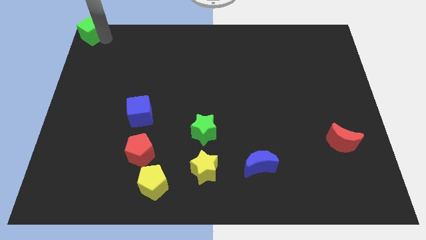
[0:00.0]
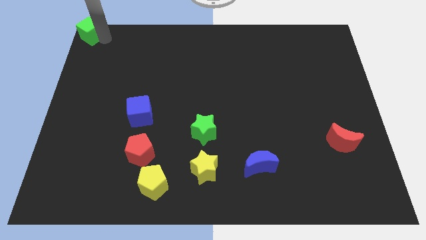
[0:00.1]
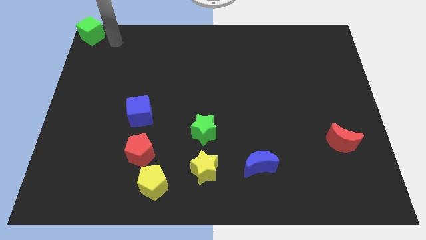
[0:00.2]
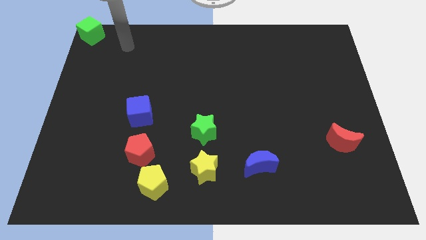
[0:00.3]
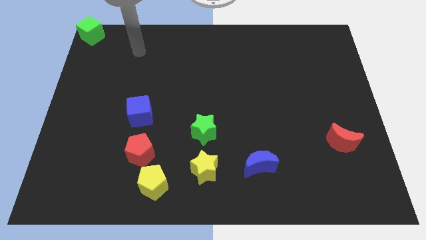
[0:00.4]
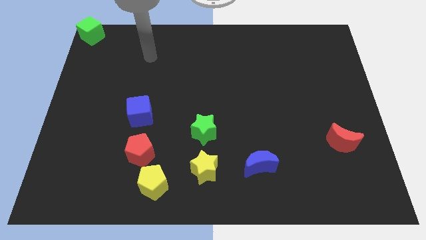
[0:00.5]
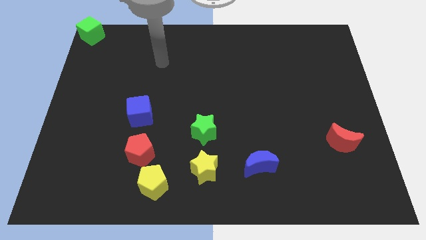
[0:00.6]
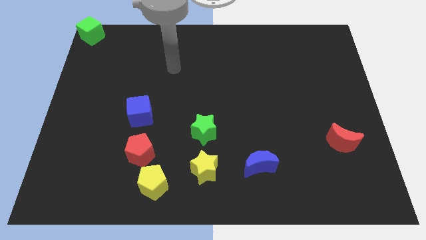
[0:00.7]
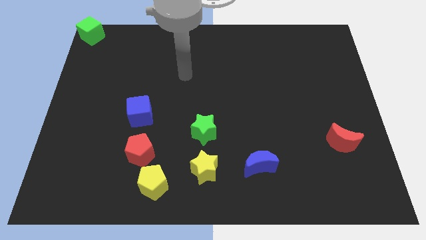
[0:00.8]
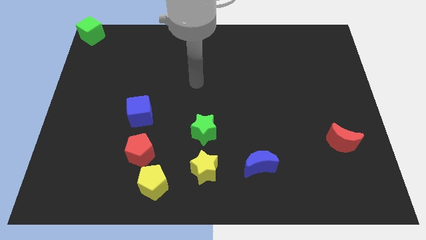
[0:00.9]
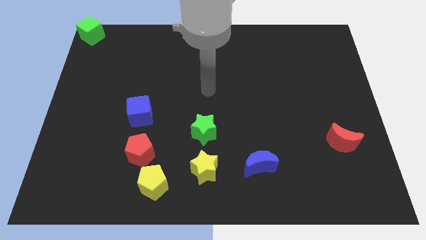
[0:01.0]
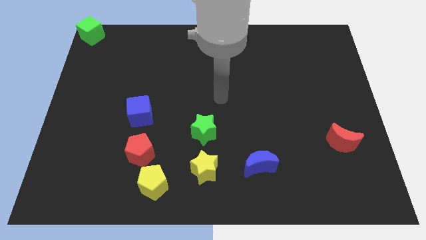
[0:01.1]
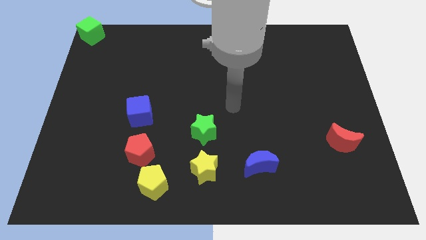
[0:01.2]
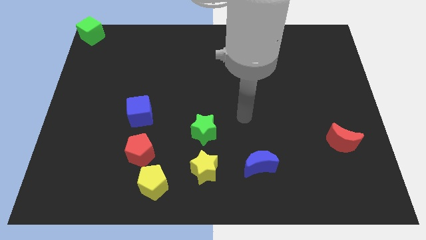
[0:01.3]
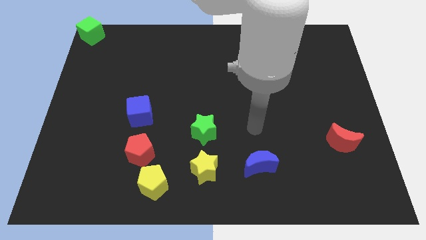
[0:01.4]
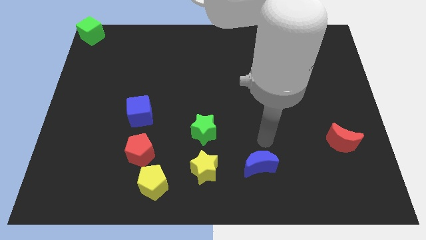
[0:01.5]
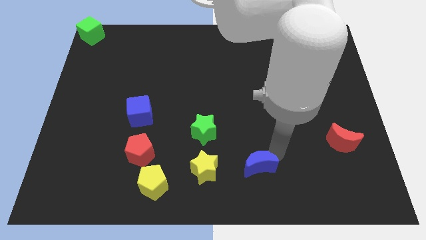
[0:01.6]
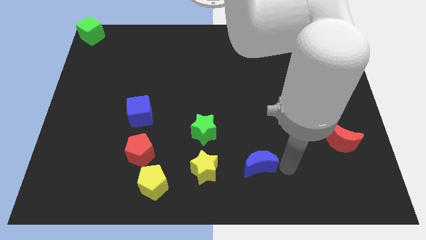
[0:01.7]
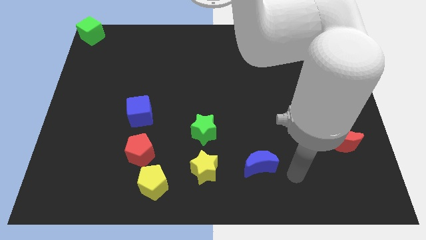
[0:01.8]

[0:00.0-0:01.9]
place your hand right of the blue moon

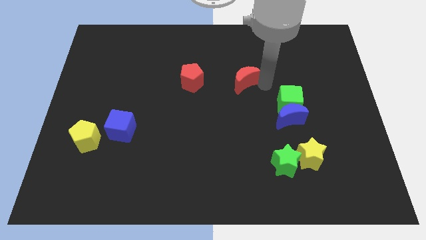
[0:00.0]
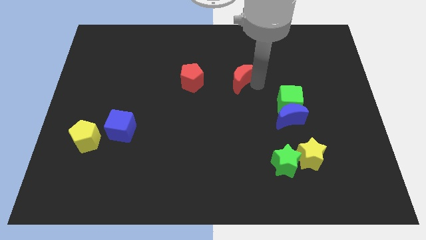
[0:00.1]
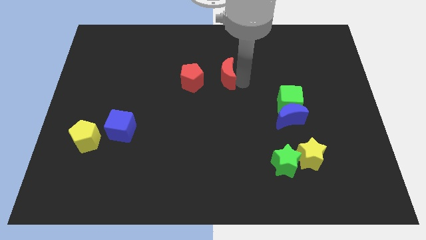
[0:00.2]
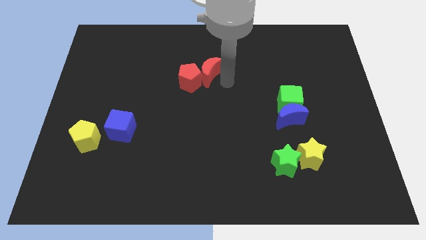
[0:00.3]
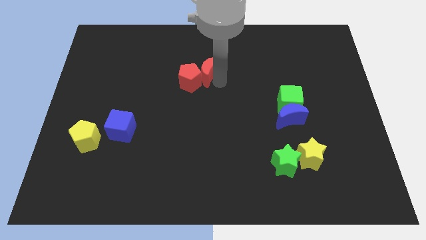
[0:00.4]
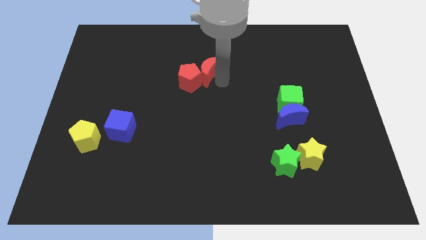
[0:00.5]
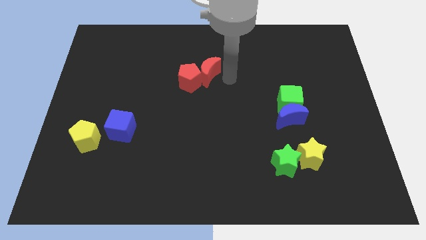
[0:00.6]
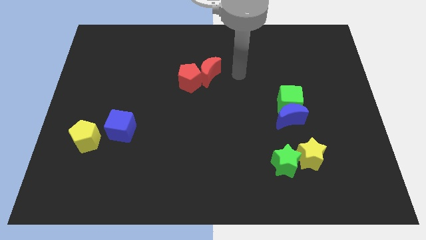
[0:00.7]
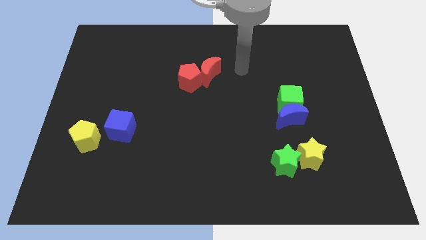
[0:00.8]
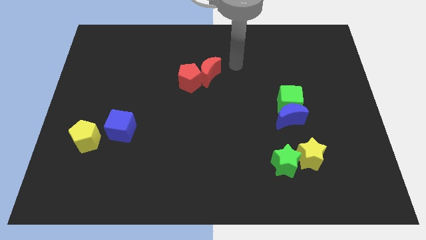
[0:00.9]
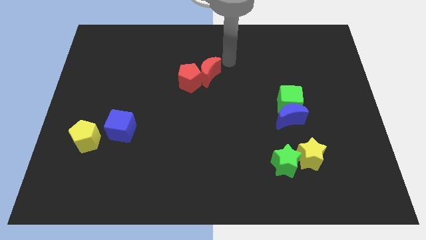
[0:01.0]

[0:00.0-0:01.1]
push the red moon into the red pentagon

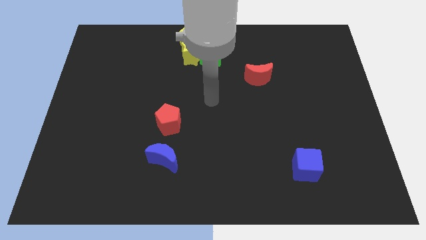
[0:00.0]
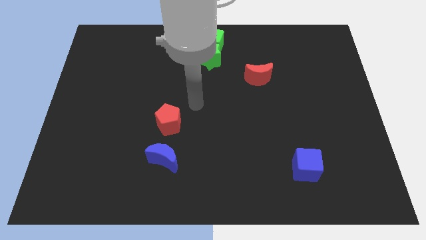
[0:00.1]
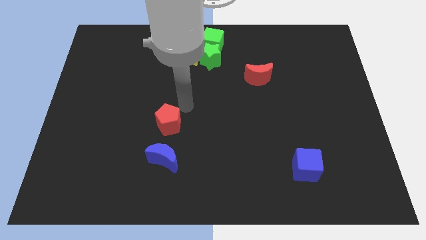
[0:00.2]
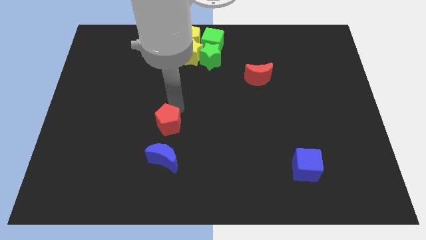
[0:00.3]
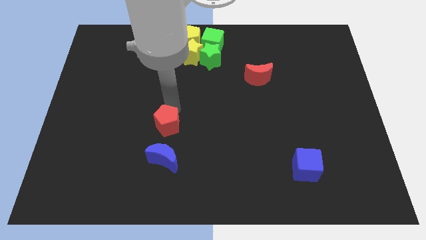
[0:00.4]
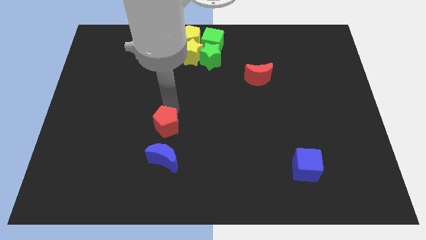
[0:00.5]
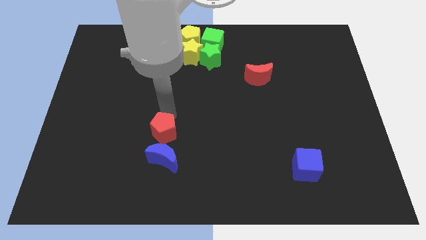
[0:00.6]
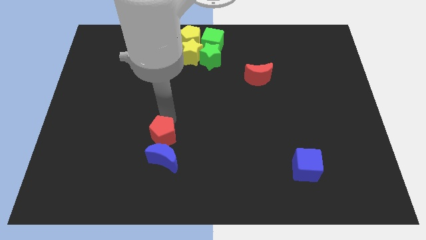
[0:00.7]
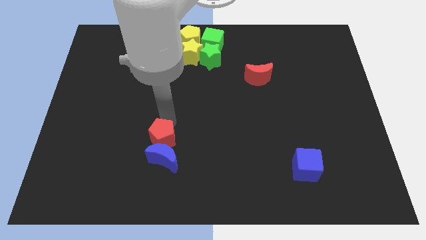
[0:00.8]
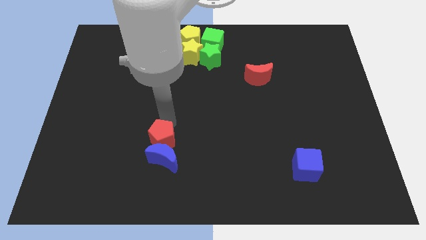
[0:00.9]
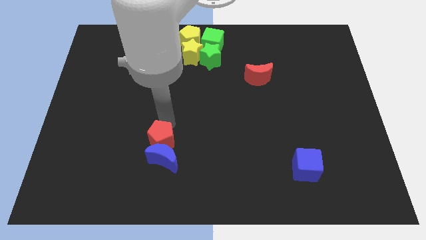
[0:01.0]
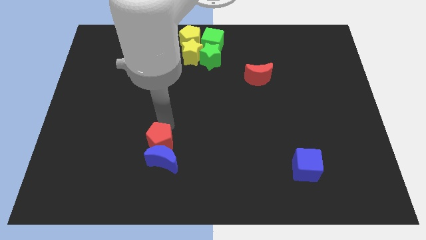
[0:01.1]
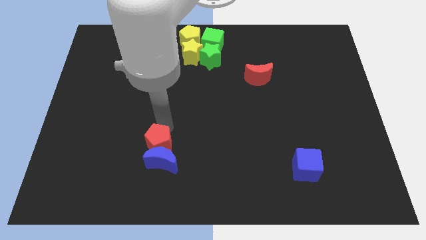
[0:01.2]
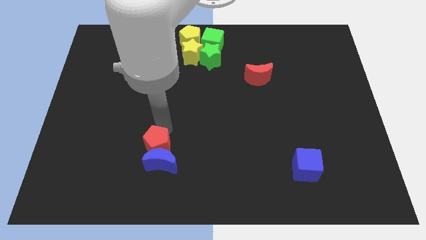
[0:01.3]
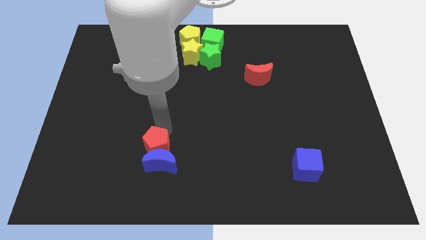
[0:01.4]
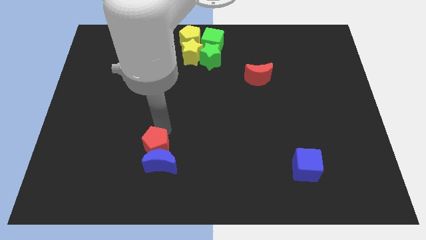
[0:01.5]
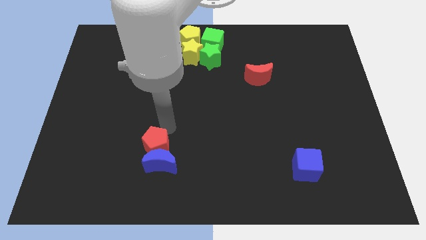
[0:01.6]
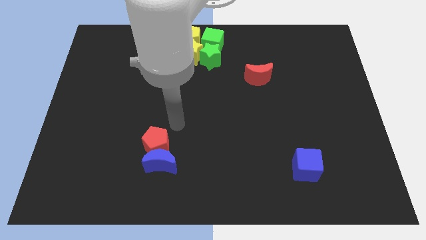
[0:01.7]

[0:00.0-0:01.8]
push the red pentagon close to the blue moon

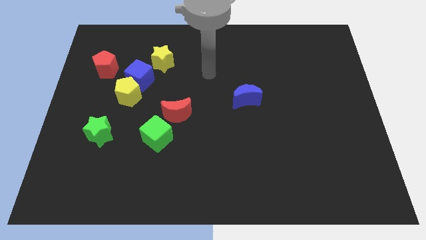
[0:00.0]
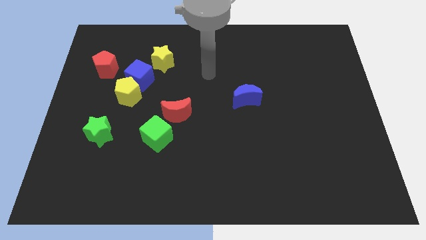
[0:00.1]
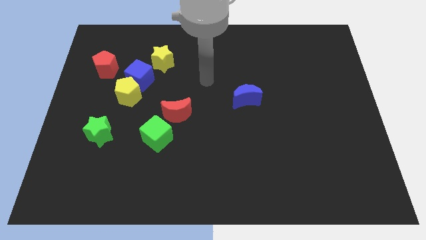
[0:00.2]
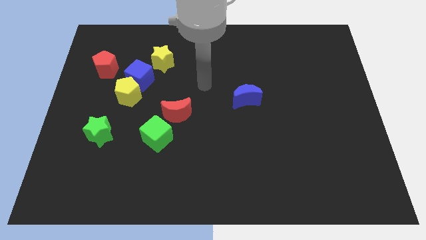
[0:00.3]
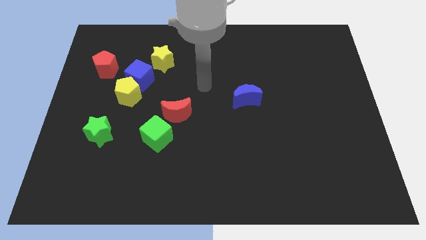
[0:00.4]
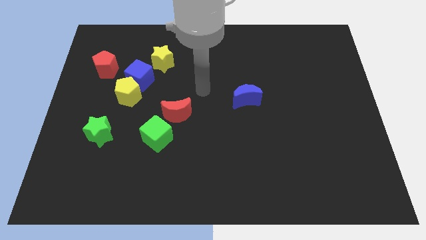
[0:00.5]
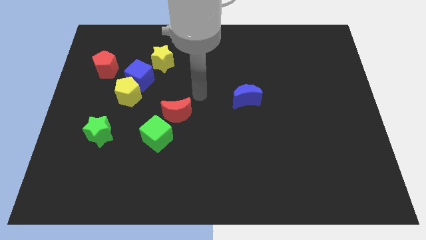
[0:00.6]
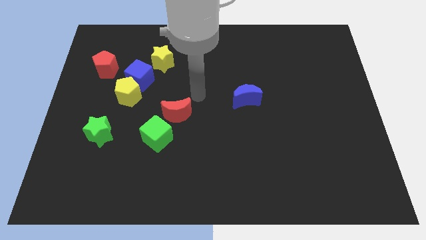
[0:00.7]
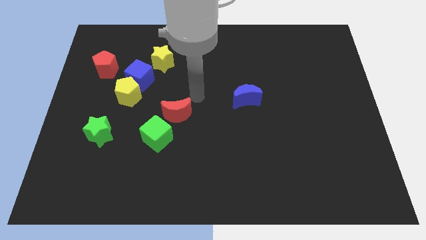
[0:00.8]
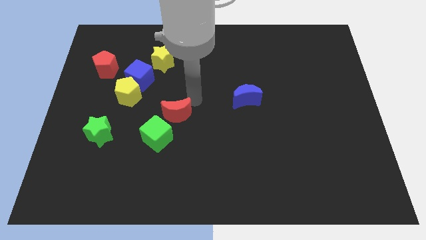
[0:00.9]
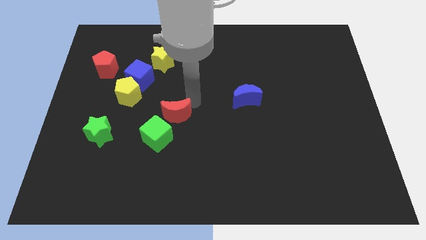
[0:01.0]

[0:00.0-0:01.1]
place the arm above the red moon

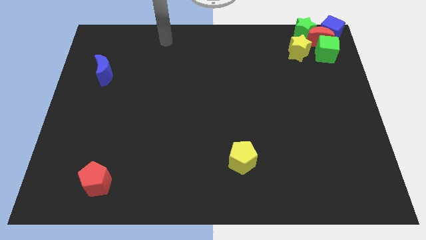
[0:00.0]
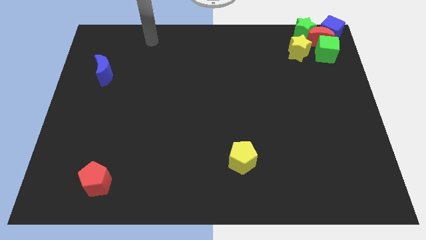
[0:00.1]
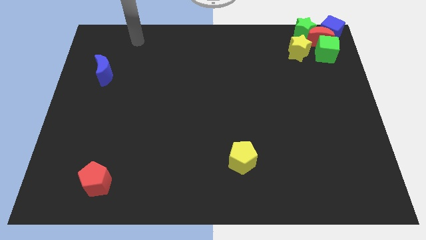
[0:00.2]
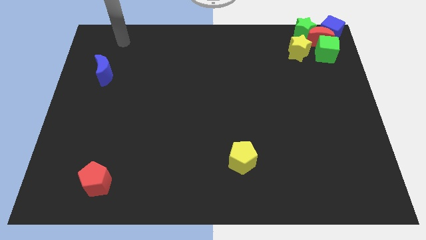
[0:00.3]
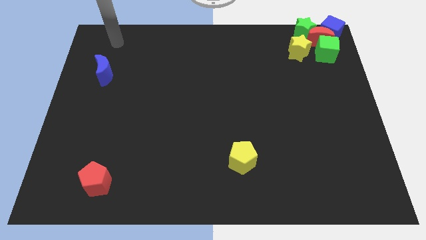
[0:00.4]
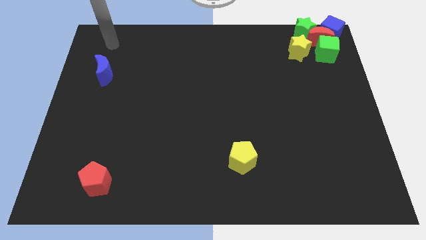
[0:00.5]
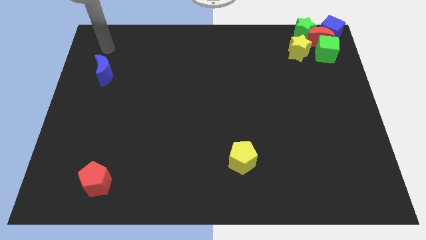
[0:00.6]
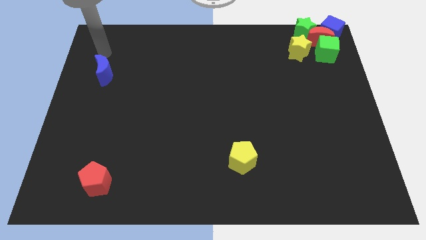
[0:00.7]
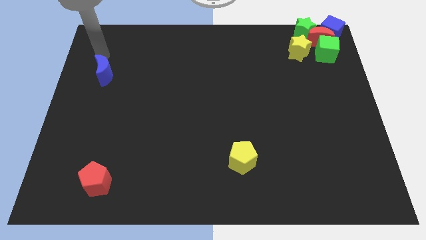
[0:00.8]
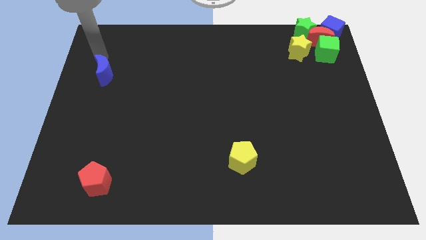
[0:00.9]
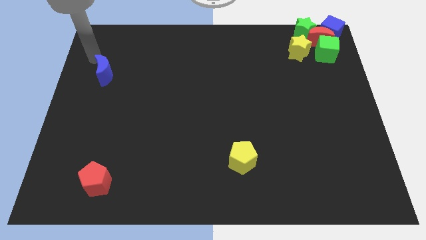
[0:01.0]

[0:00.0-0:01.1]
move the arm towards the blue moon

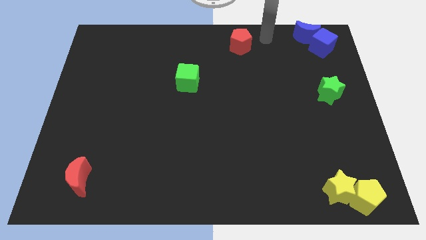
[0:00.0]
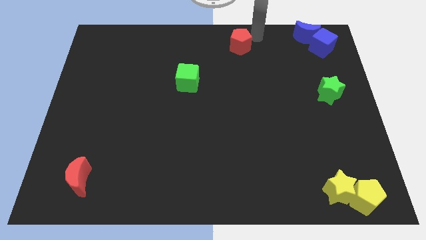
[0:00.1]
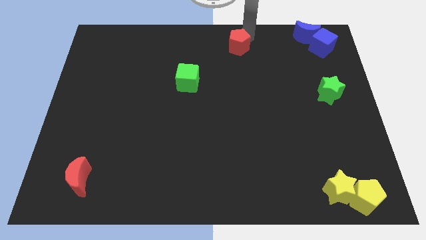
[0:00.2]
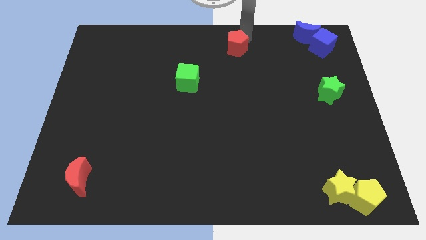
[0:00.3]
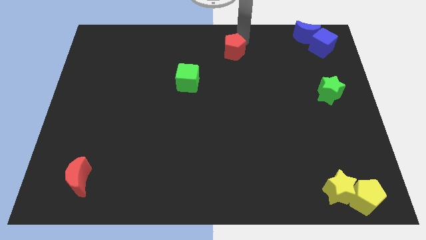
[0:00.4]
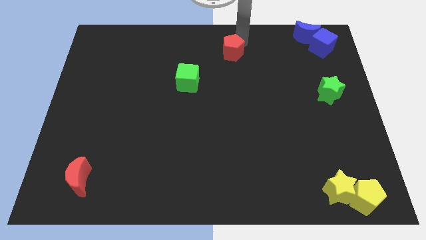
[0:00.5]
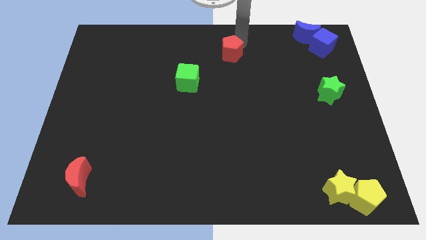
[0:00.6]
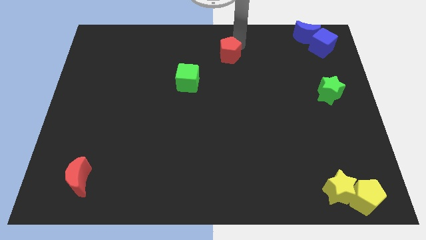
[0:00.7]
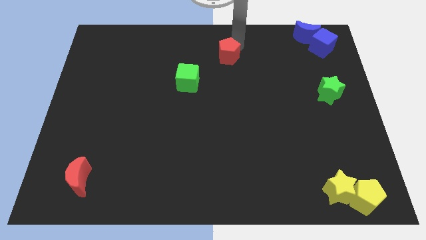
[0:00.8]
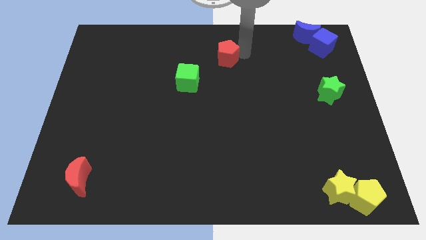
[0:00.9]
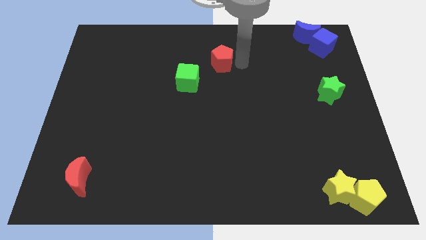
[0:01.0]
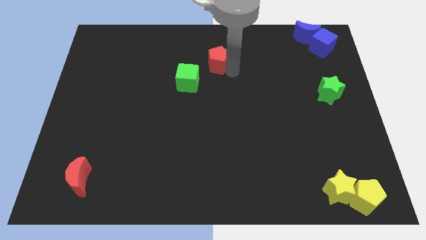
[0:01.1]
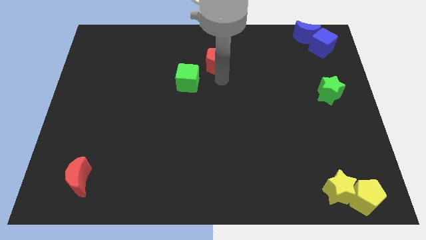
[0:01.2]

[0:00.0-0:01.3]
drag the red pentagon closer to the green cube

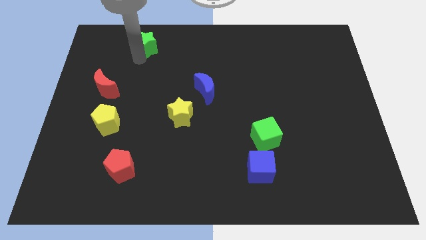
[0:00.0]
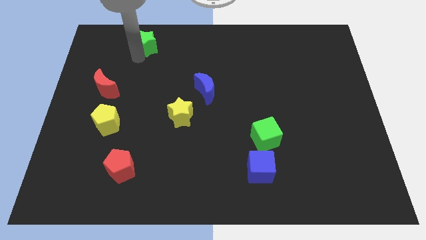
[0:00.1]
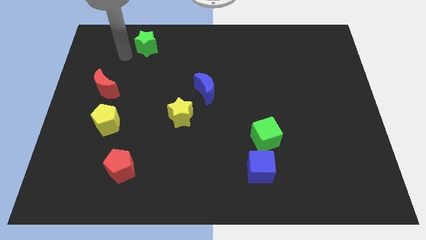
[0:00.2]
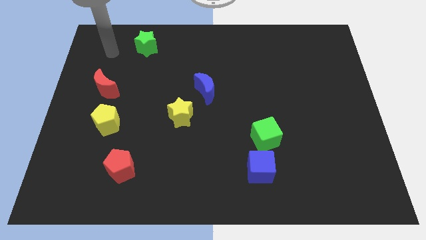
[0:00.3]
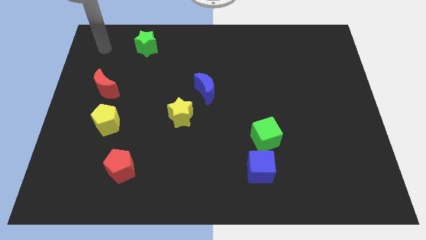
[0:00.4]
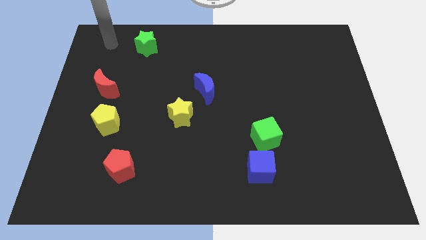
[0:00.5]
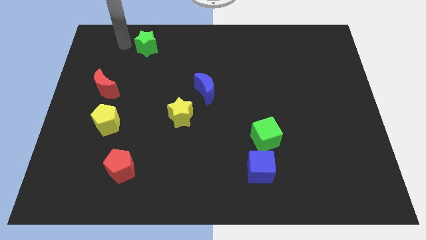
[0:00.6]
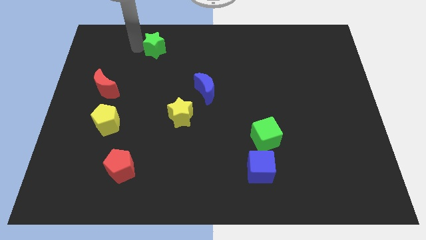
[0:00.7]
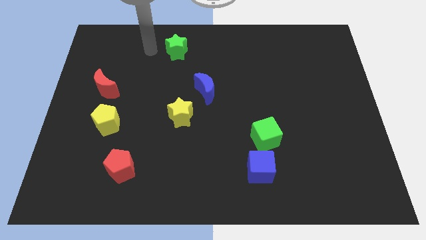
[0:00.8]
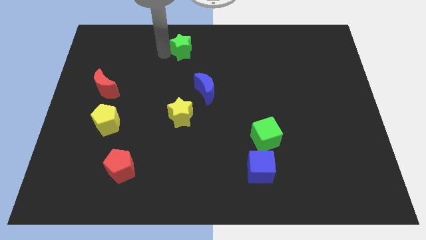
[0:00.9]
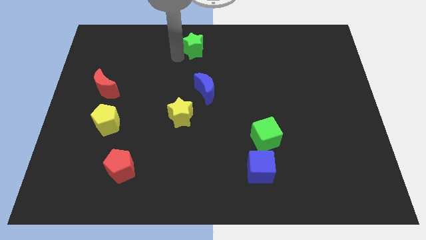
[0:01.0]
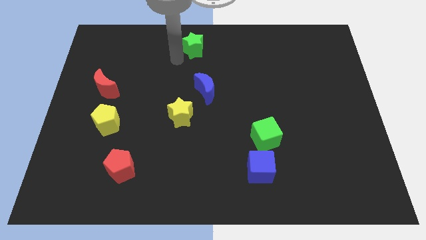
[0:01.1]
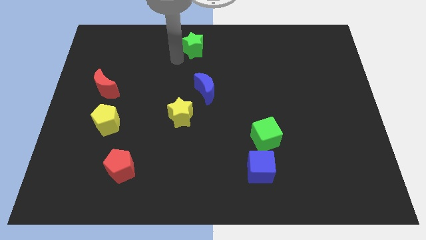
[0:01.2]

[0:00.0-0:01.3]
put the green star vertically above the blue crescent
